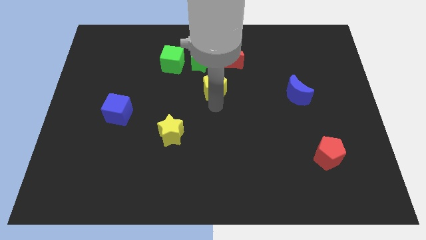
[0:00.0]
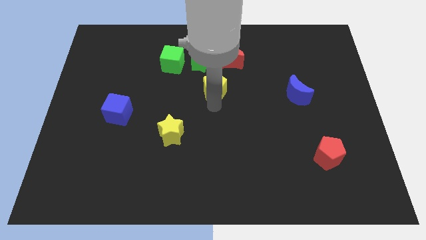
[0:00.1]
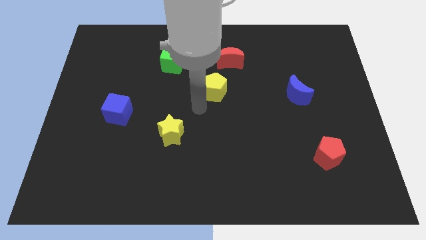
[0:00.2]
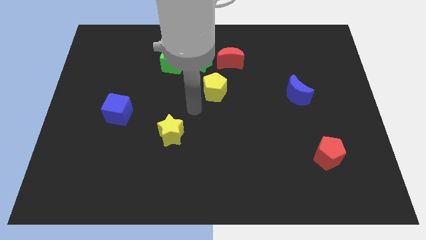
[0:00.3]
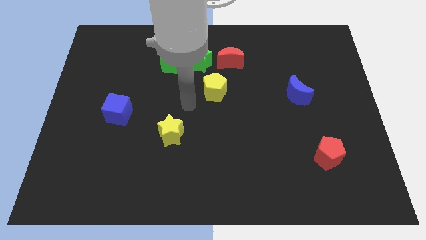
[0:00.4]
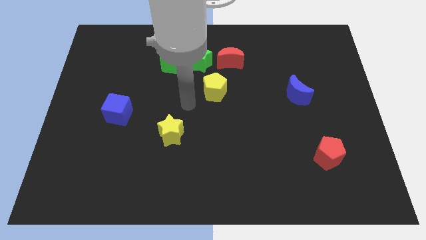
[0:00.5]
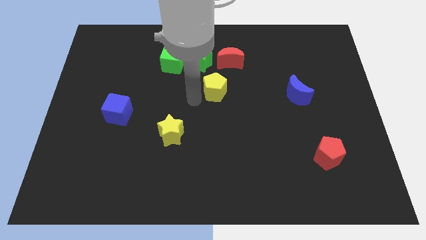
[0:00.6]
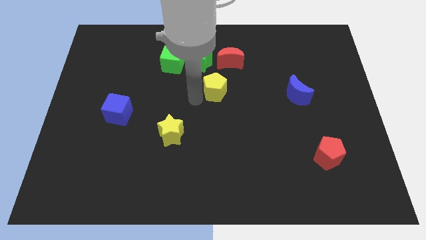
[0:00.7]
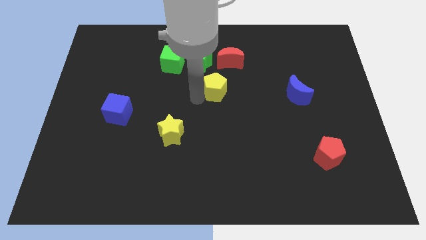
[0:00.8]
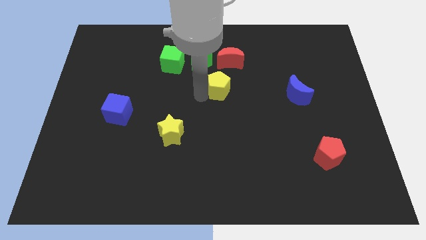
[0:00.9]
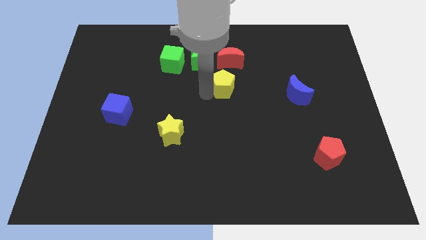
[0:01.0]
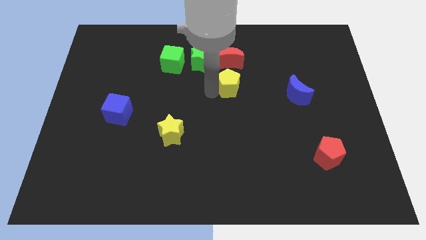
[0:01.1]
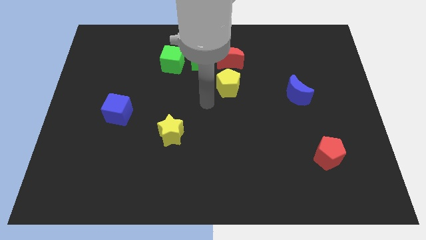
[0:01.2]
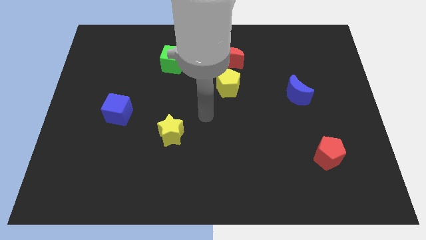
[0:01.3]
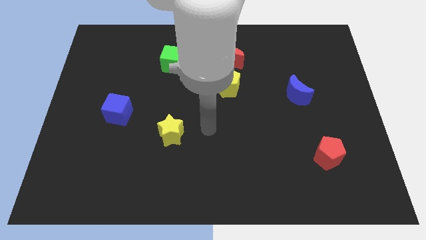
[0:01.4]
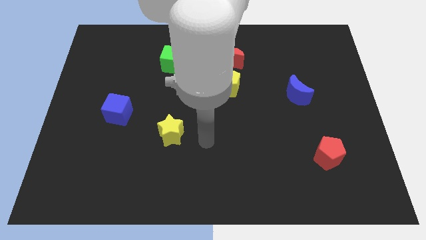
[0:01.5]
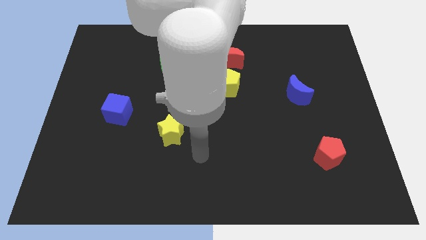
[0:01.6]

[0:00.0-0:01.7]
move the yellow pentagon to the bottom of the red crescent

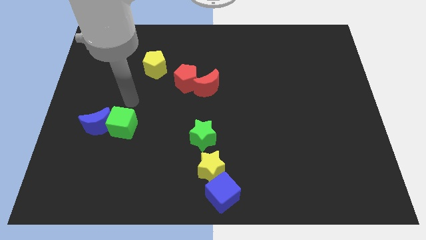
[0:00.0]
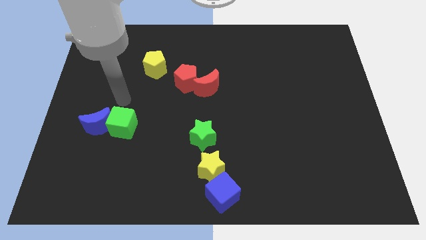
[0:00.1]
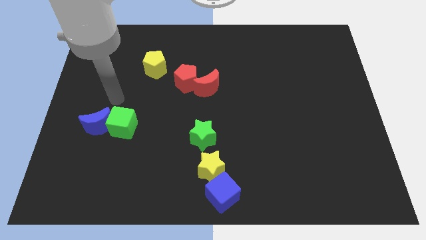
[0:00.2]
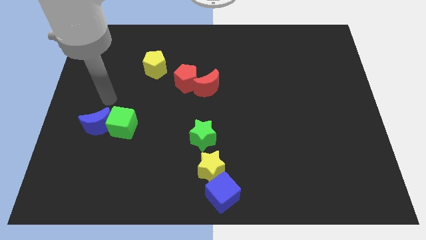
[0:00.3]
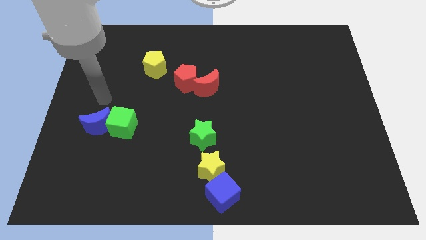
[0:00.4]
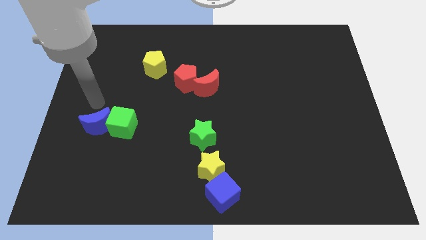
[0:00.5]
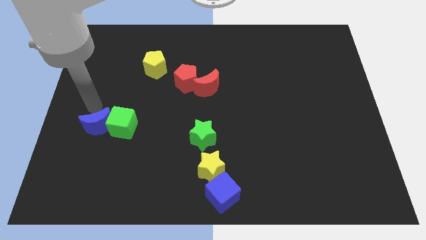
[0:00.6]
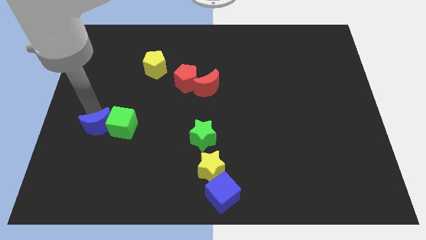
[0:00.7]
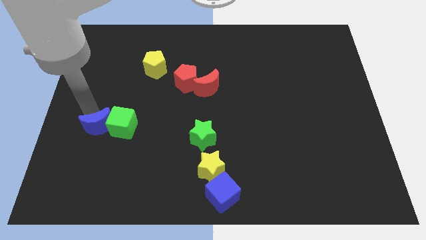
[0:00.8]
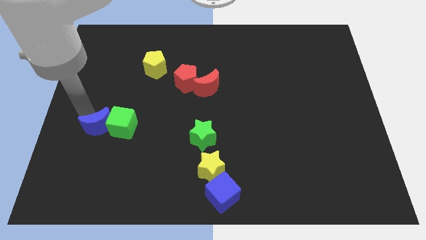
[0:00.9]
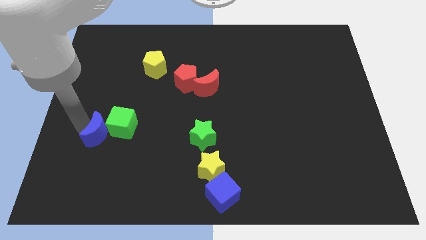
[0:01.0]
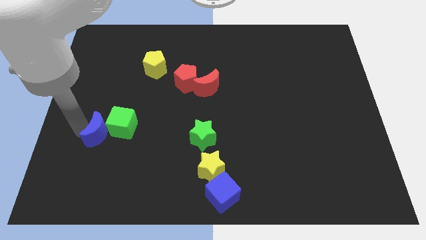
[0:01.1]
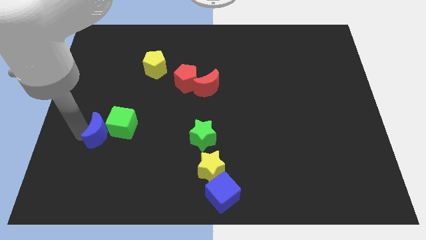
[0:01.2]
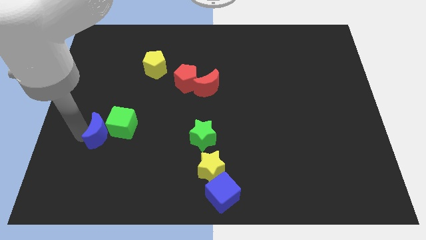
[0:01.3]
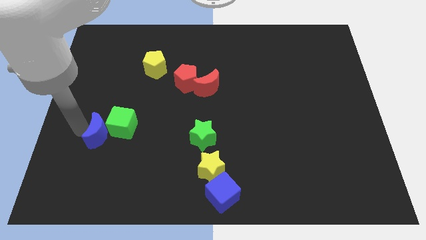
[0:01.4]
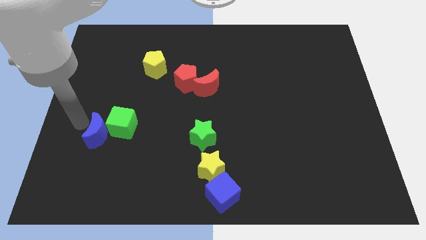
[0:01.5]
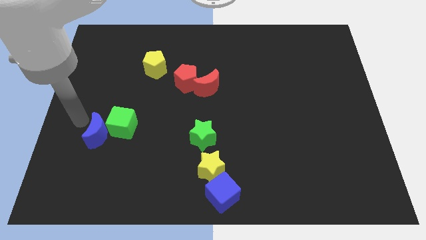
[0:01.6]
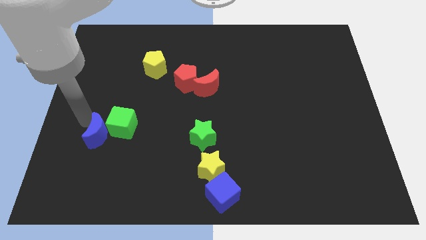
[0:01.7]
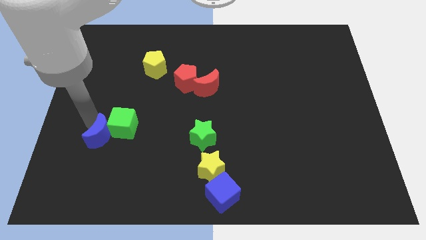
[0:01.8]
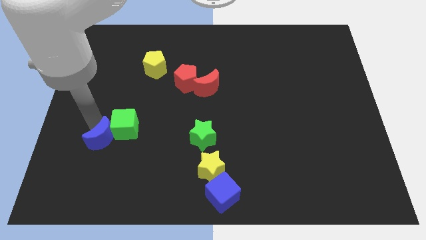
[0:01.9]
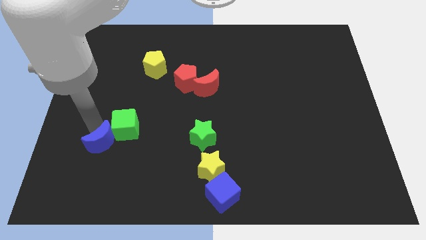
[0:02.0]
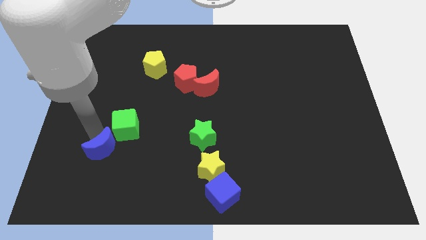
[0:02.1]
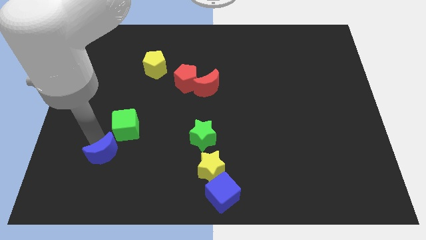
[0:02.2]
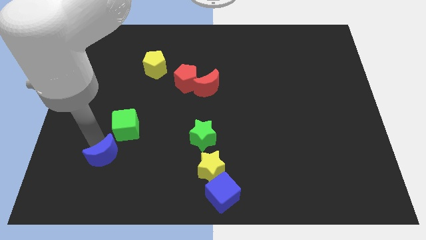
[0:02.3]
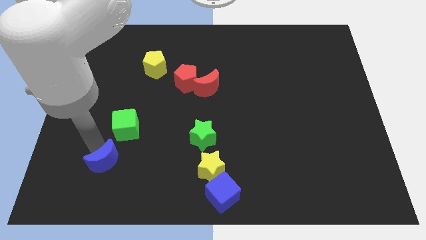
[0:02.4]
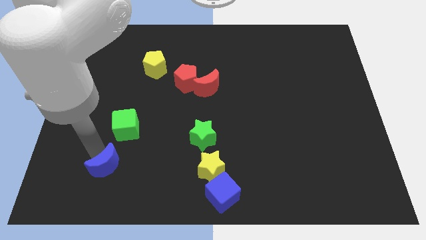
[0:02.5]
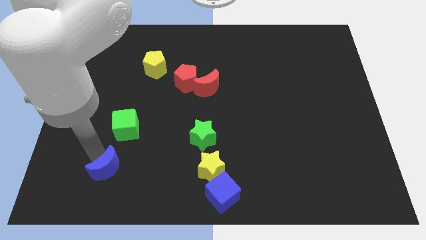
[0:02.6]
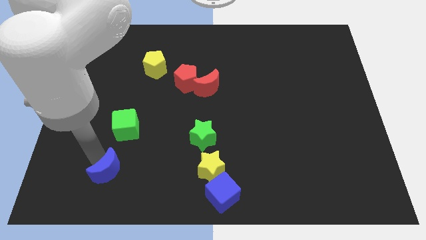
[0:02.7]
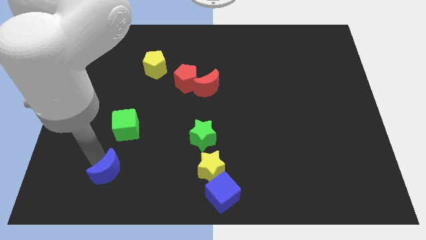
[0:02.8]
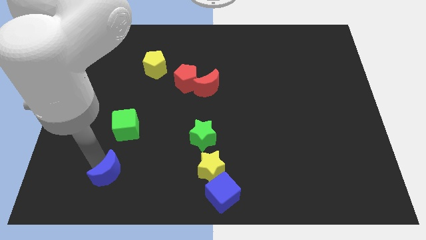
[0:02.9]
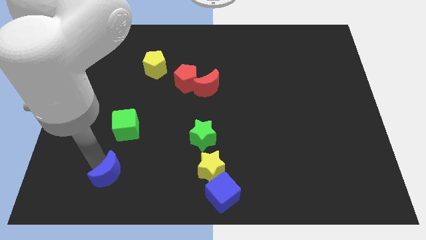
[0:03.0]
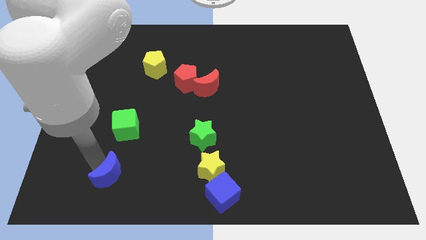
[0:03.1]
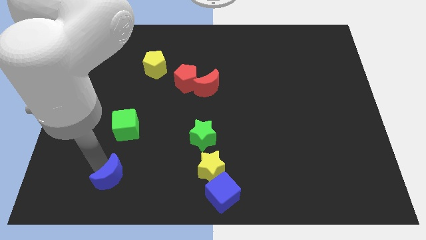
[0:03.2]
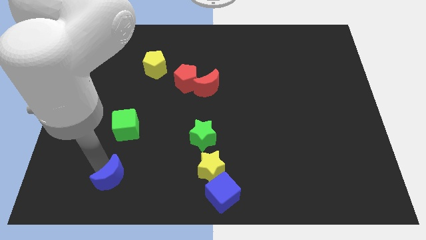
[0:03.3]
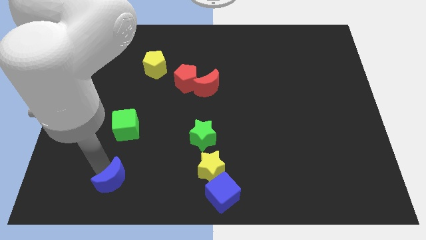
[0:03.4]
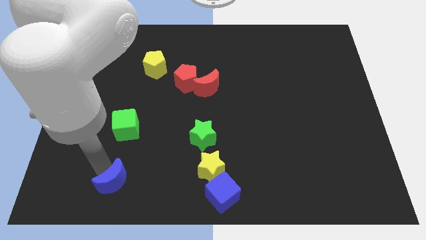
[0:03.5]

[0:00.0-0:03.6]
place blue crescent vertically below green cube

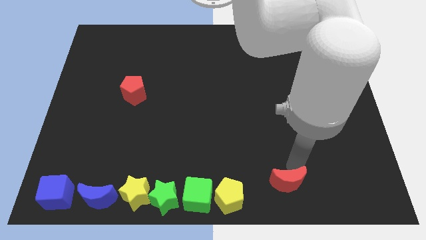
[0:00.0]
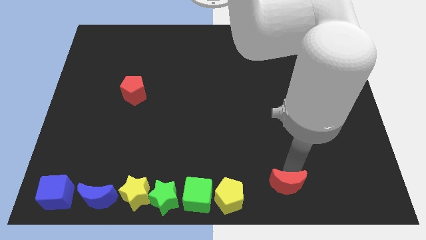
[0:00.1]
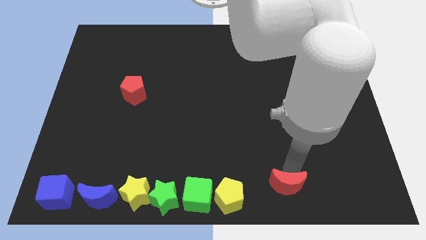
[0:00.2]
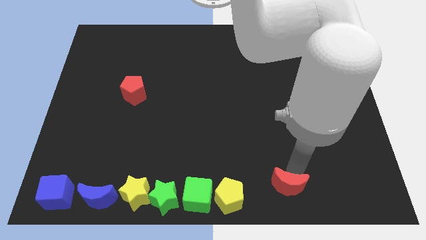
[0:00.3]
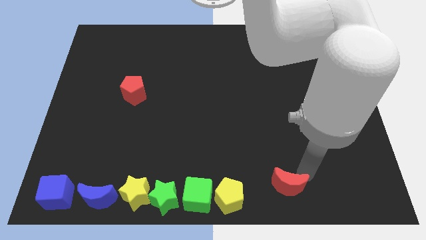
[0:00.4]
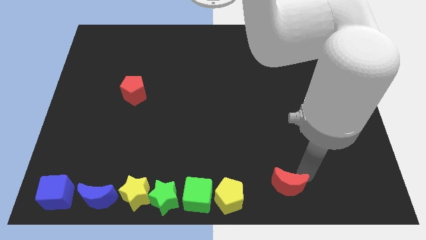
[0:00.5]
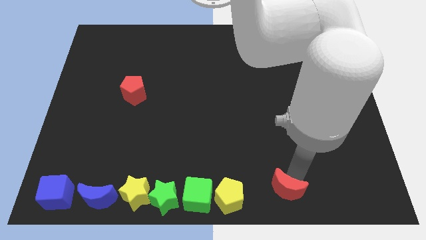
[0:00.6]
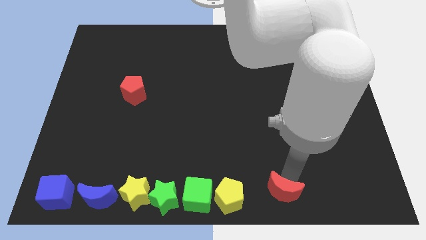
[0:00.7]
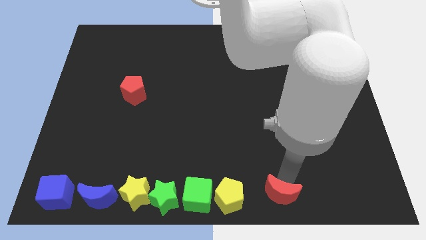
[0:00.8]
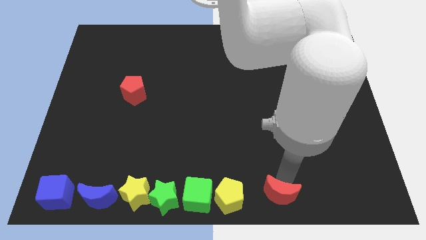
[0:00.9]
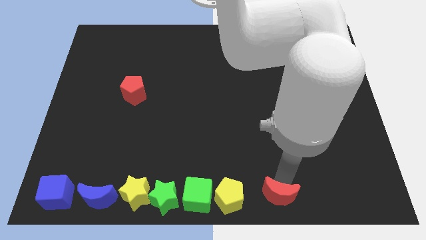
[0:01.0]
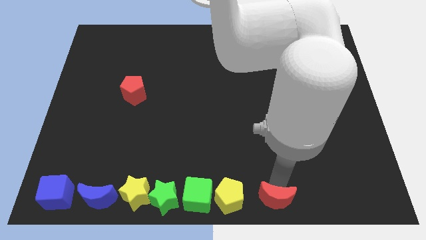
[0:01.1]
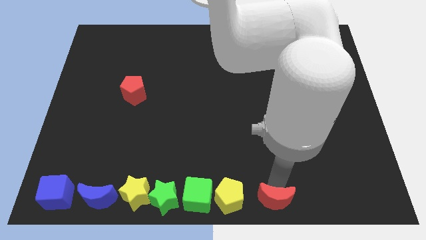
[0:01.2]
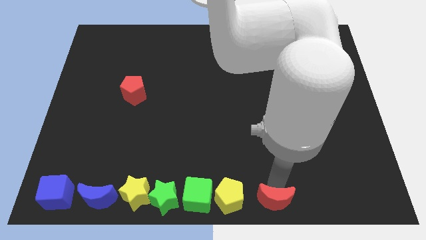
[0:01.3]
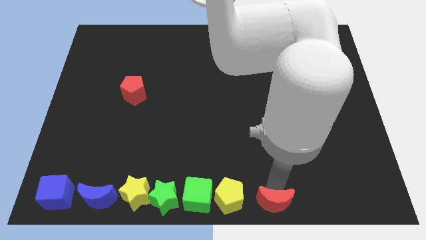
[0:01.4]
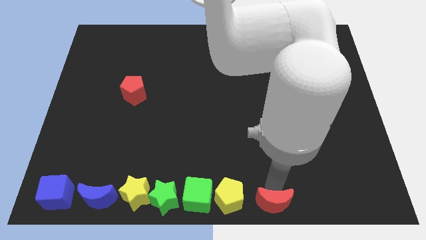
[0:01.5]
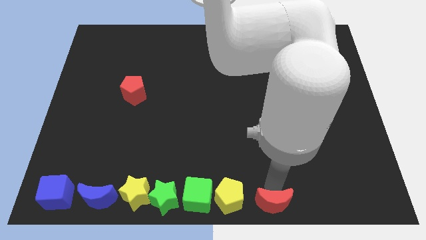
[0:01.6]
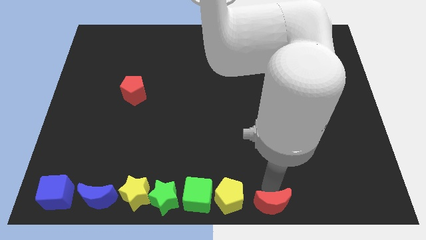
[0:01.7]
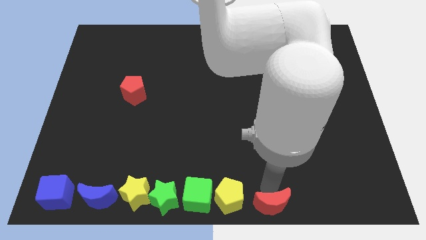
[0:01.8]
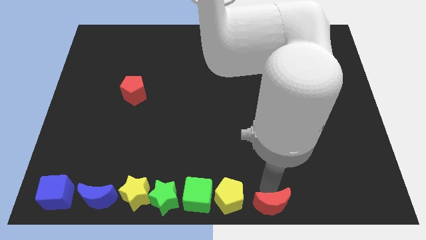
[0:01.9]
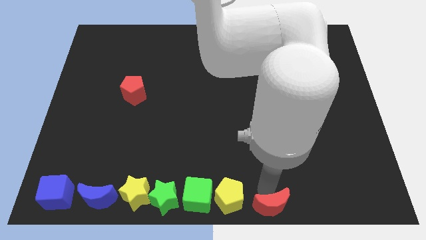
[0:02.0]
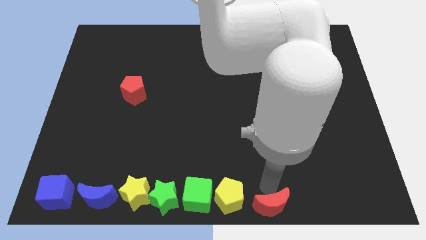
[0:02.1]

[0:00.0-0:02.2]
slide red crescent to the bottom center

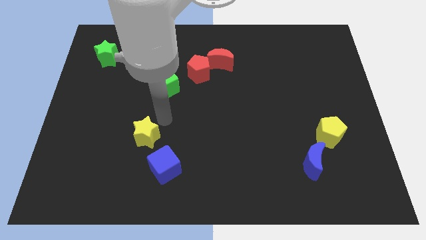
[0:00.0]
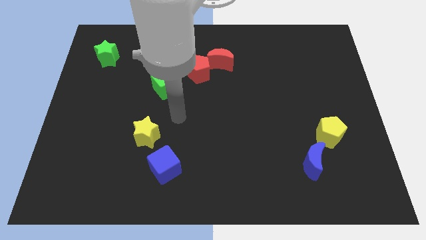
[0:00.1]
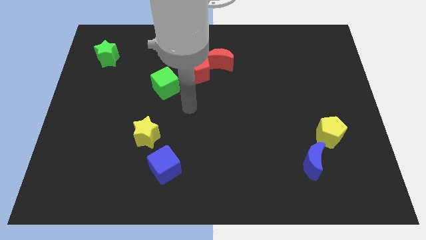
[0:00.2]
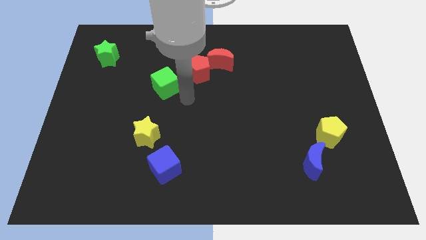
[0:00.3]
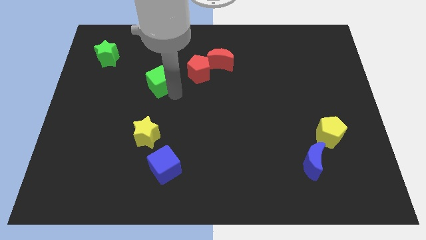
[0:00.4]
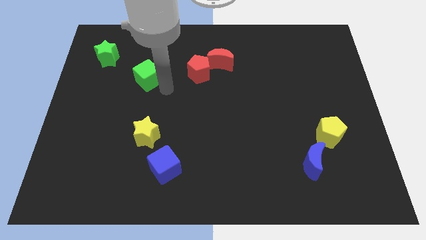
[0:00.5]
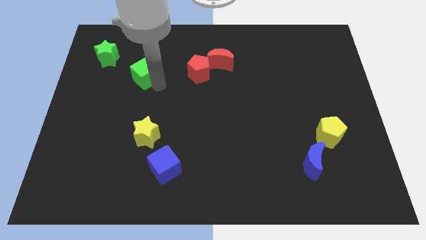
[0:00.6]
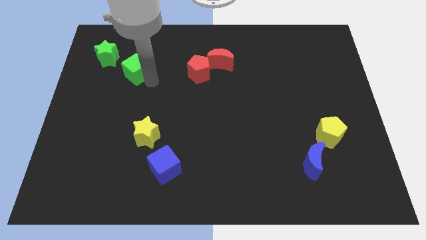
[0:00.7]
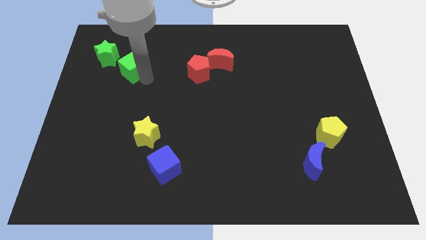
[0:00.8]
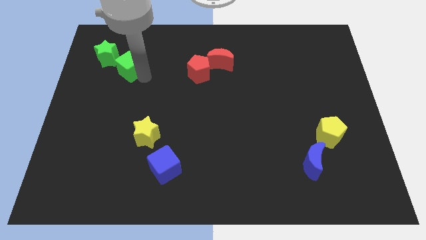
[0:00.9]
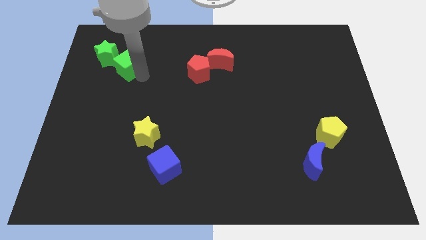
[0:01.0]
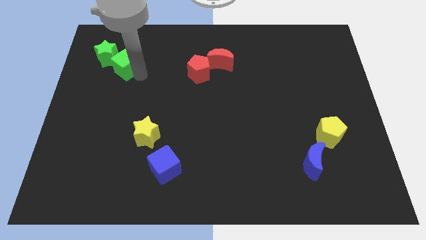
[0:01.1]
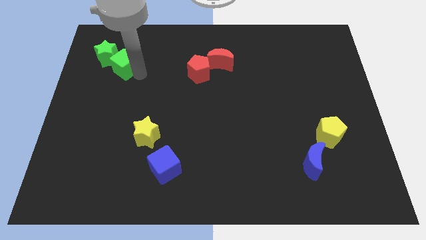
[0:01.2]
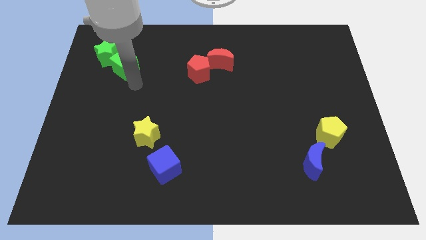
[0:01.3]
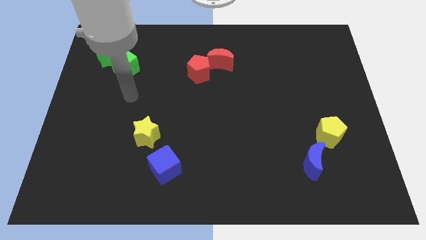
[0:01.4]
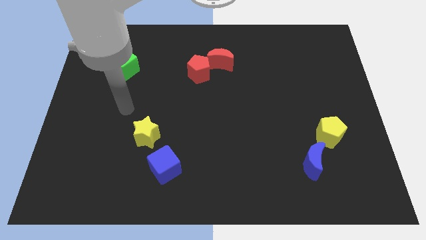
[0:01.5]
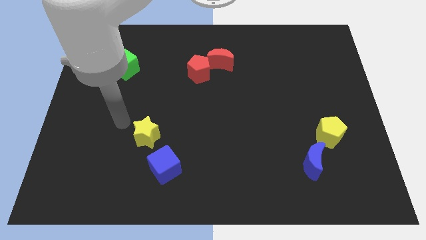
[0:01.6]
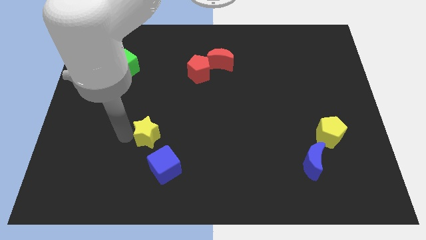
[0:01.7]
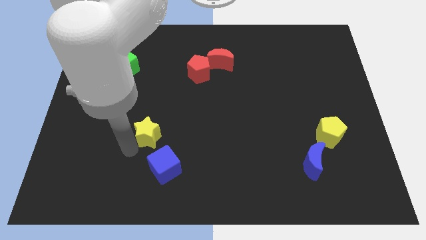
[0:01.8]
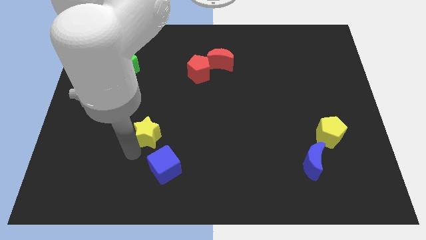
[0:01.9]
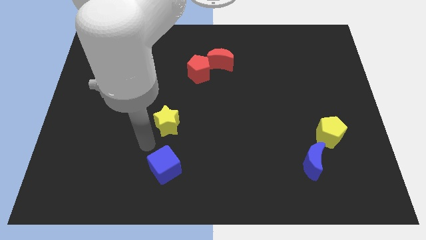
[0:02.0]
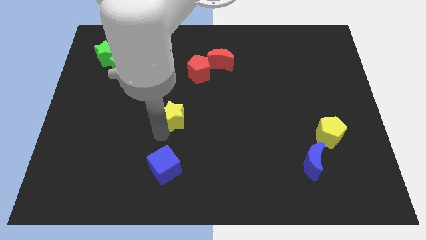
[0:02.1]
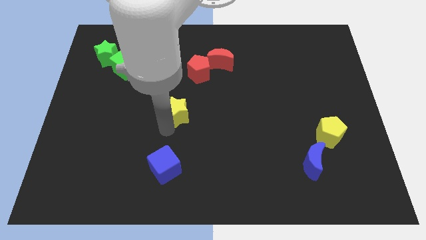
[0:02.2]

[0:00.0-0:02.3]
place the green cube beside the green star
